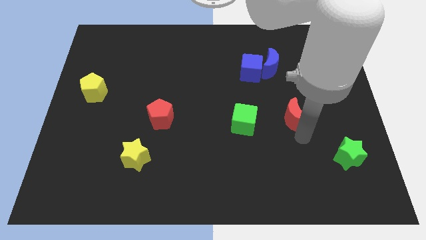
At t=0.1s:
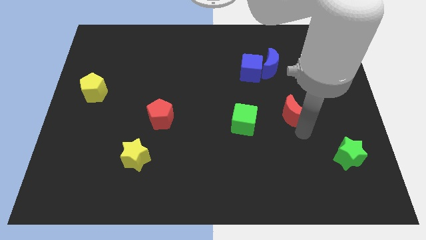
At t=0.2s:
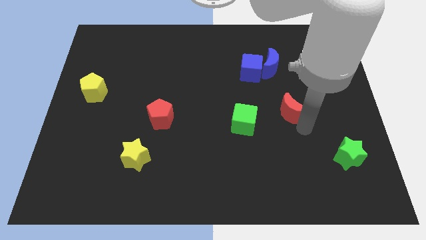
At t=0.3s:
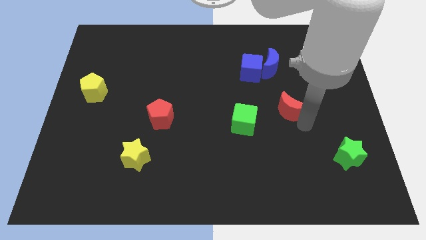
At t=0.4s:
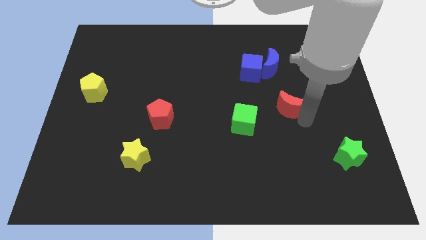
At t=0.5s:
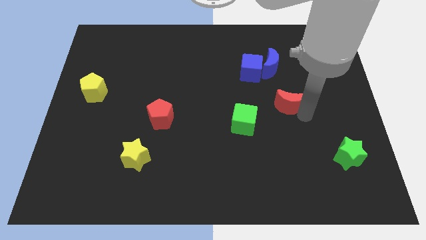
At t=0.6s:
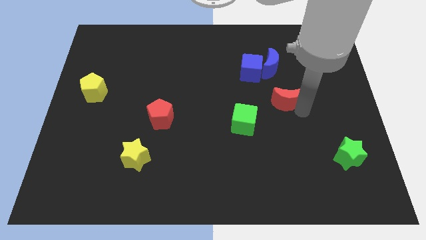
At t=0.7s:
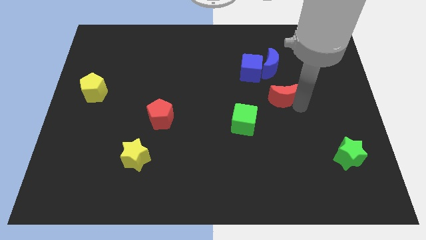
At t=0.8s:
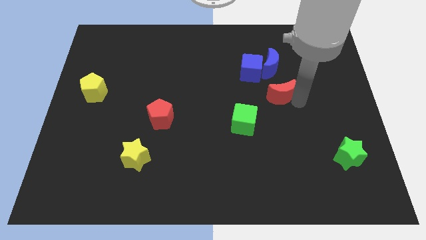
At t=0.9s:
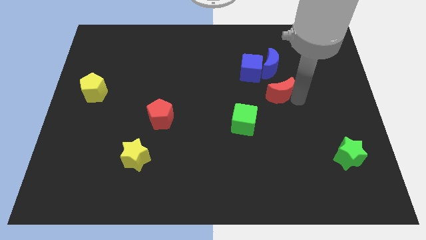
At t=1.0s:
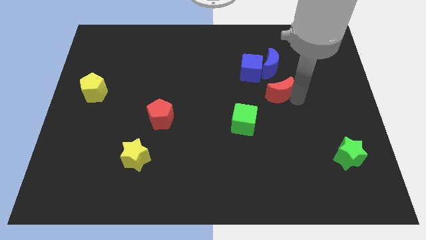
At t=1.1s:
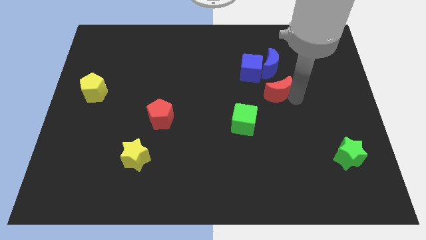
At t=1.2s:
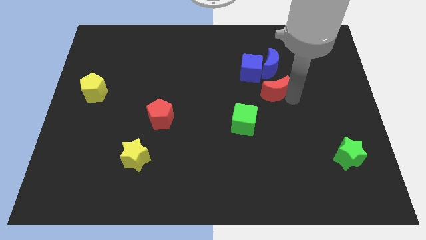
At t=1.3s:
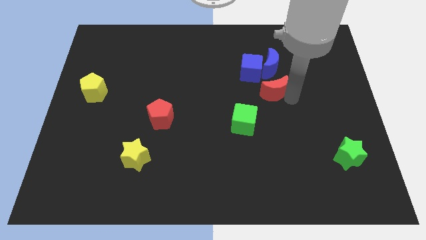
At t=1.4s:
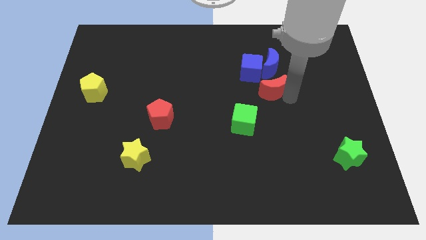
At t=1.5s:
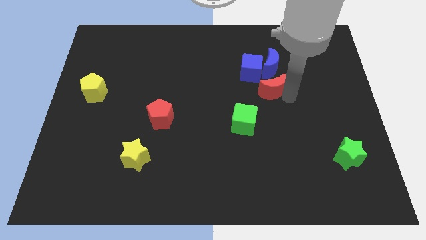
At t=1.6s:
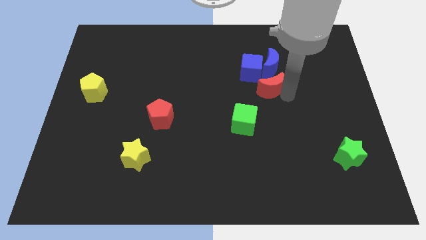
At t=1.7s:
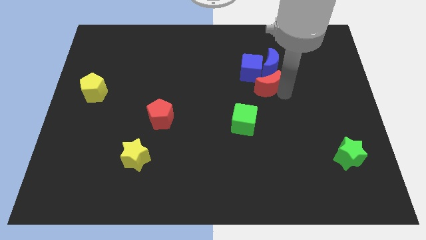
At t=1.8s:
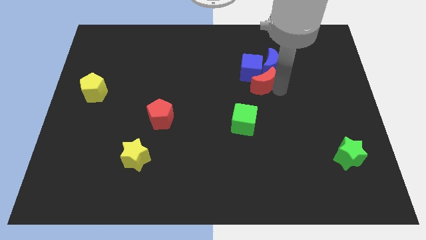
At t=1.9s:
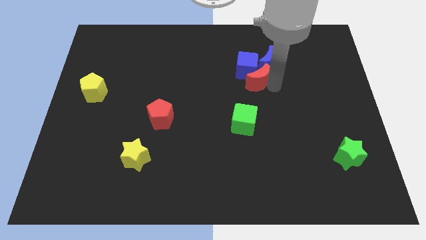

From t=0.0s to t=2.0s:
place red moon below the blue blocks

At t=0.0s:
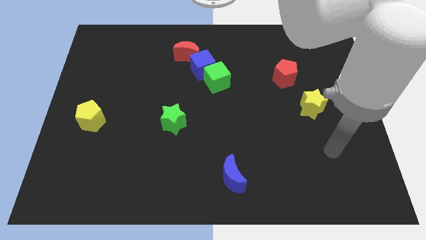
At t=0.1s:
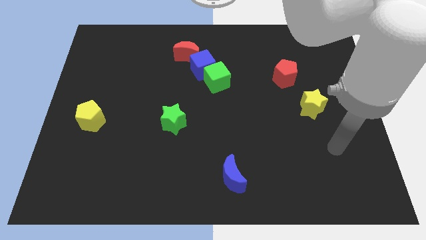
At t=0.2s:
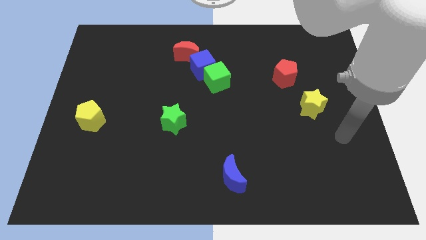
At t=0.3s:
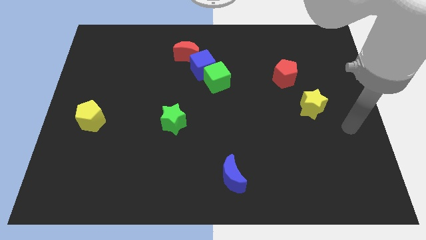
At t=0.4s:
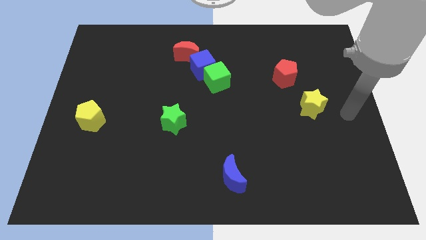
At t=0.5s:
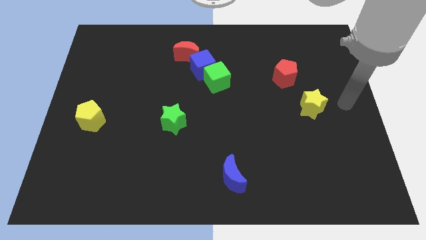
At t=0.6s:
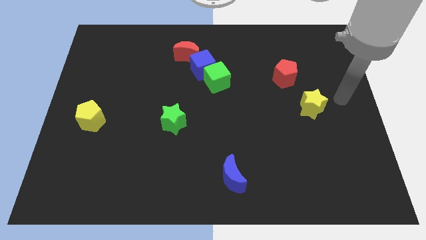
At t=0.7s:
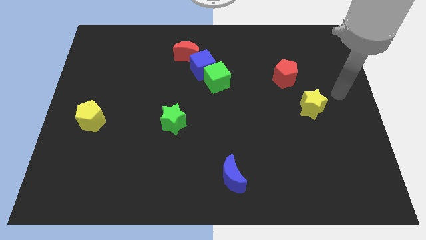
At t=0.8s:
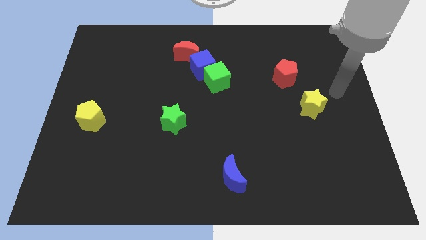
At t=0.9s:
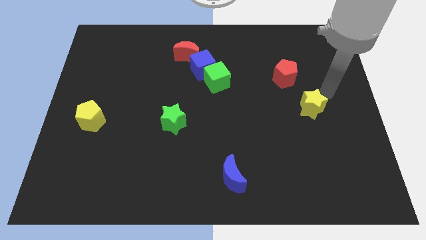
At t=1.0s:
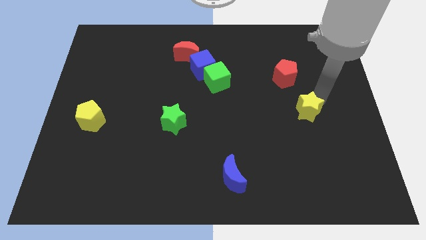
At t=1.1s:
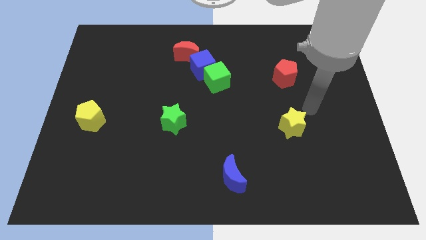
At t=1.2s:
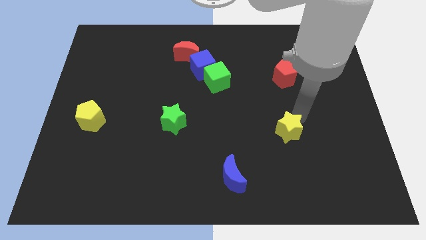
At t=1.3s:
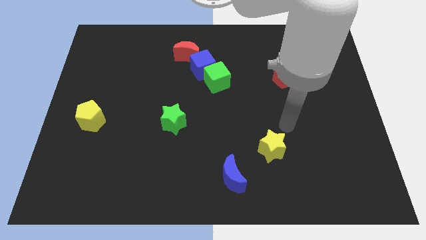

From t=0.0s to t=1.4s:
push the yellow star towards the blue crescent

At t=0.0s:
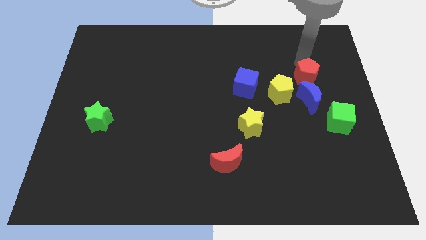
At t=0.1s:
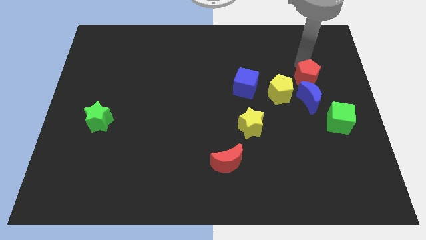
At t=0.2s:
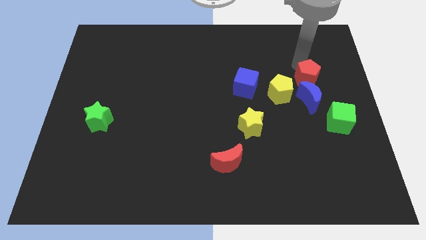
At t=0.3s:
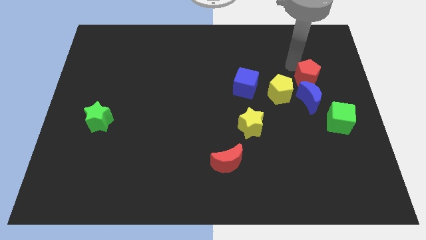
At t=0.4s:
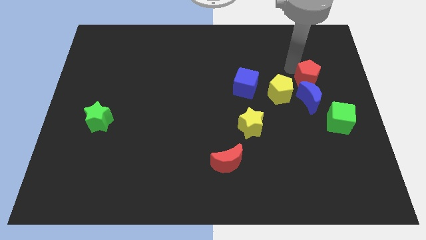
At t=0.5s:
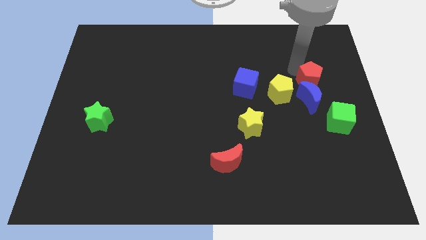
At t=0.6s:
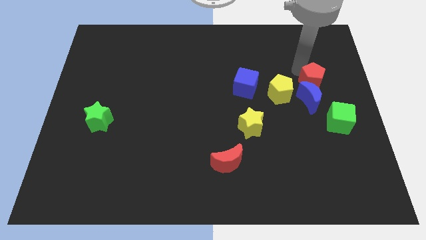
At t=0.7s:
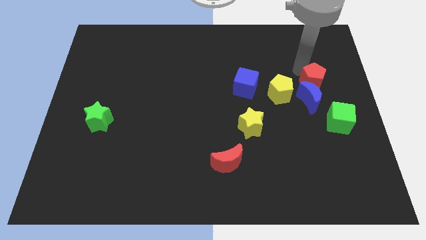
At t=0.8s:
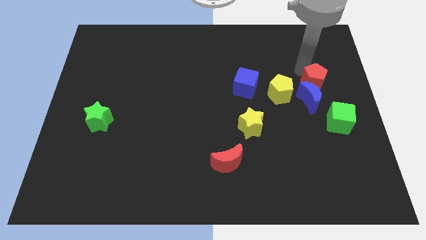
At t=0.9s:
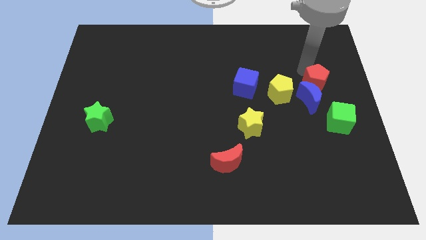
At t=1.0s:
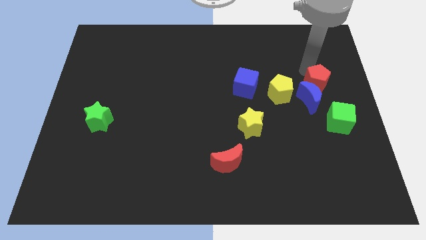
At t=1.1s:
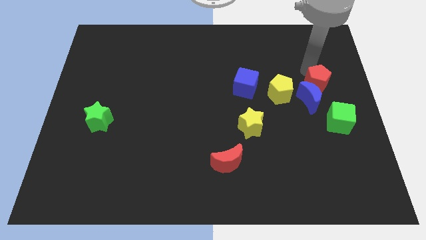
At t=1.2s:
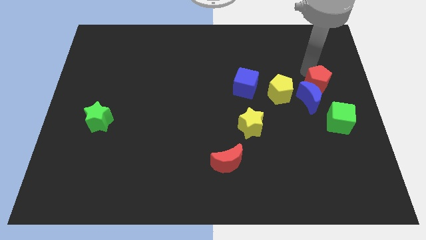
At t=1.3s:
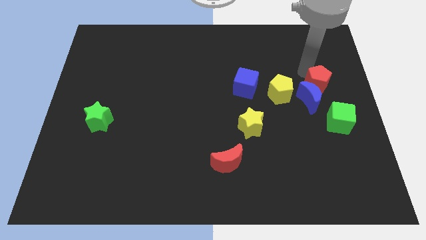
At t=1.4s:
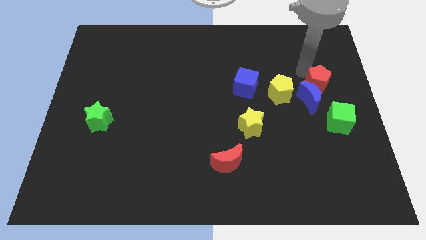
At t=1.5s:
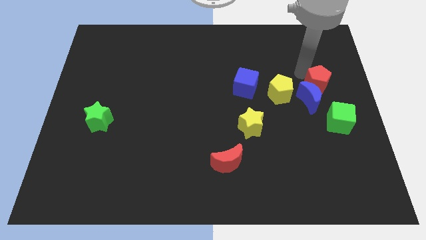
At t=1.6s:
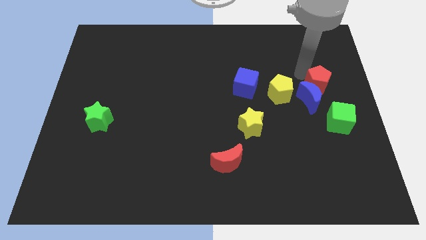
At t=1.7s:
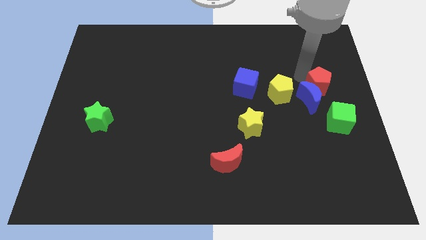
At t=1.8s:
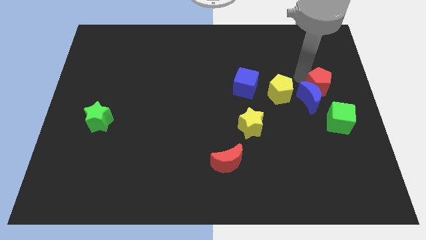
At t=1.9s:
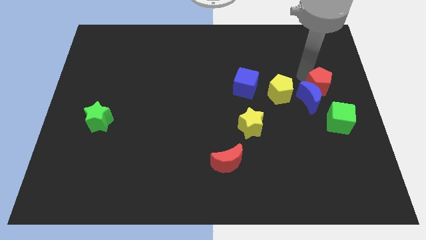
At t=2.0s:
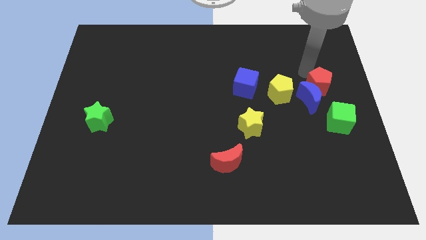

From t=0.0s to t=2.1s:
push red pentagon close to blue moon

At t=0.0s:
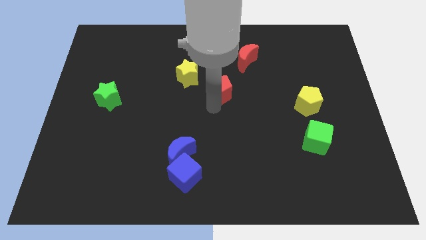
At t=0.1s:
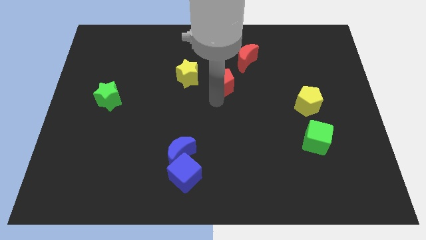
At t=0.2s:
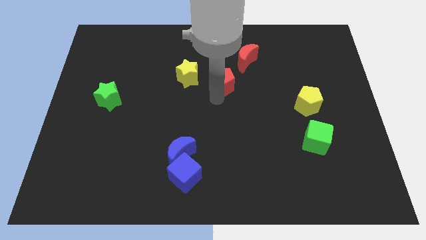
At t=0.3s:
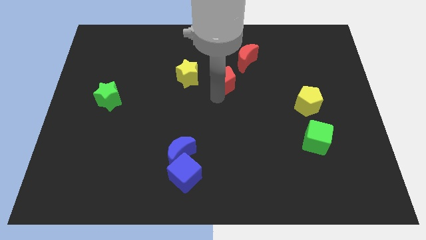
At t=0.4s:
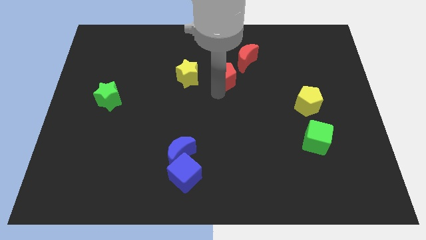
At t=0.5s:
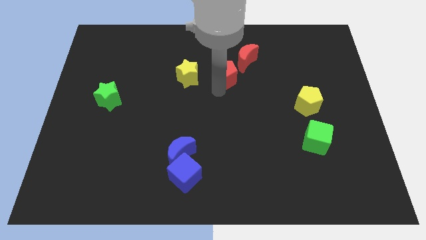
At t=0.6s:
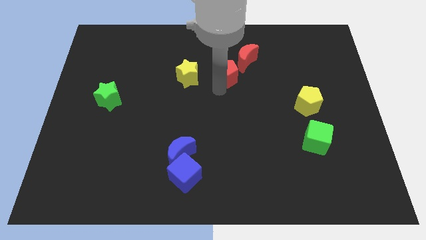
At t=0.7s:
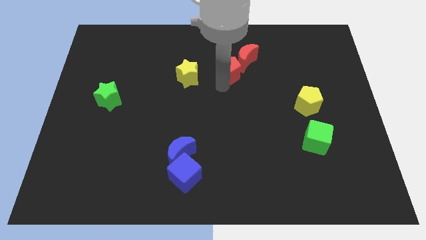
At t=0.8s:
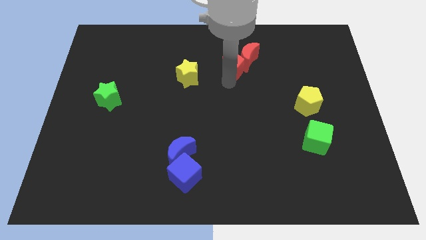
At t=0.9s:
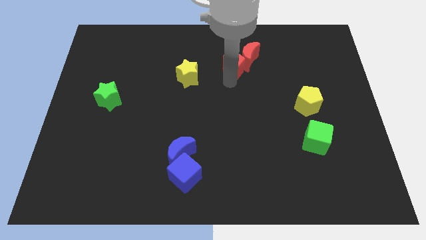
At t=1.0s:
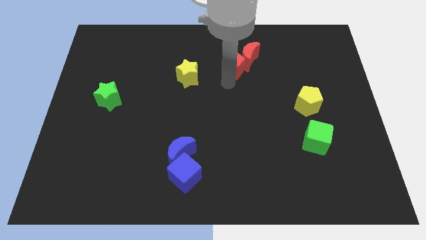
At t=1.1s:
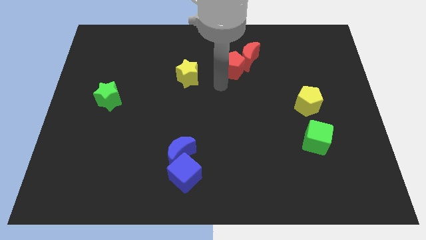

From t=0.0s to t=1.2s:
push the red pentagon into the red crescent

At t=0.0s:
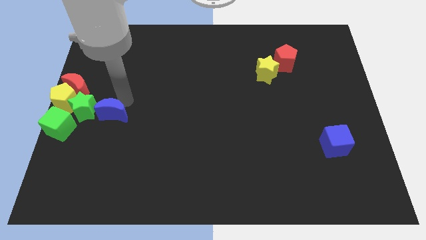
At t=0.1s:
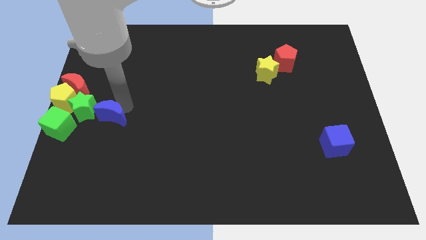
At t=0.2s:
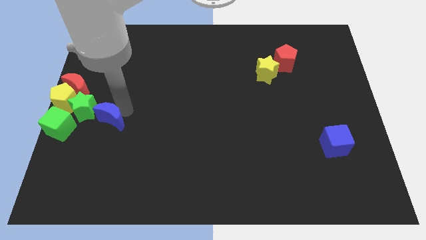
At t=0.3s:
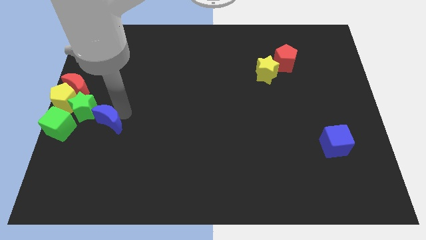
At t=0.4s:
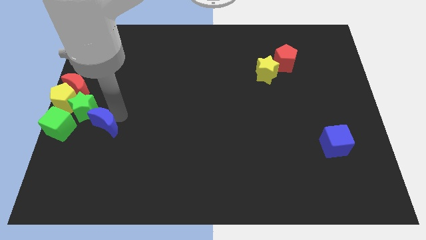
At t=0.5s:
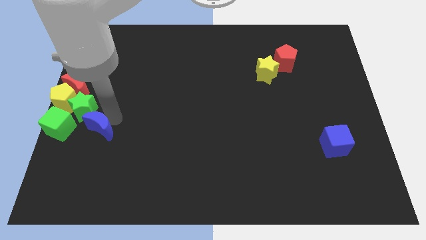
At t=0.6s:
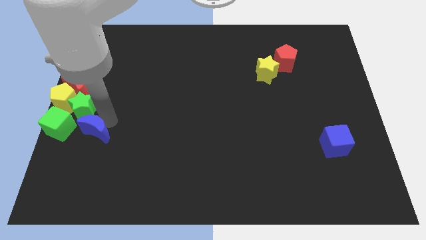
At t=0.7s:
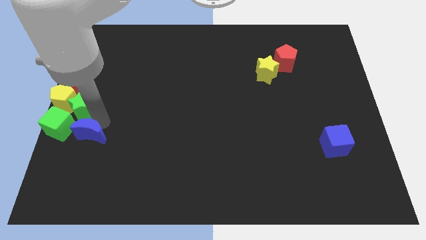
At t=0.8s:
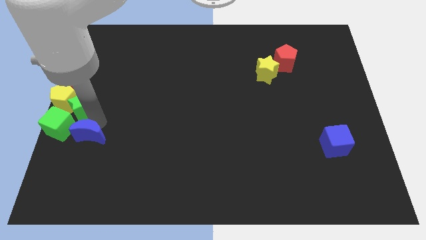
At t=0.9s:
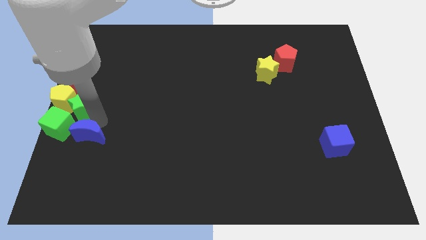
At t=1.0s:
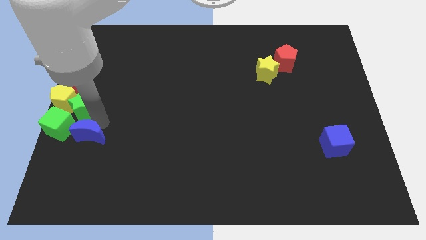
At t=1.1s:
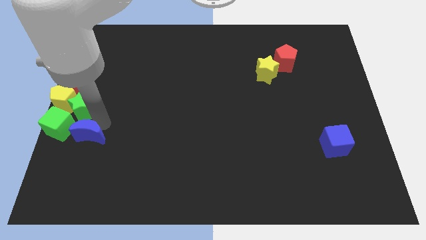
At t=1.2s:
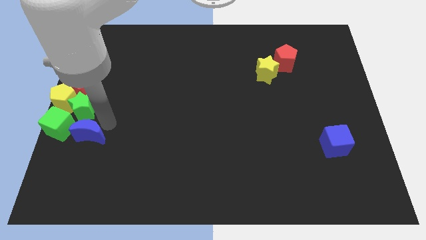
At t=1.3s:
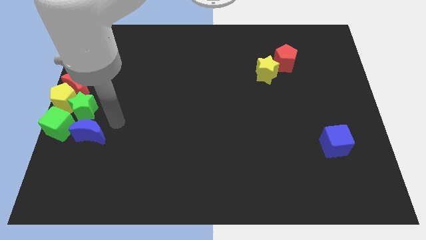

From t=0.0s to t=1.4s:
push the blue moon to the right of green cube

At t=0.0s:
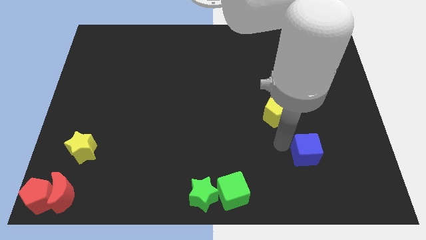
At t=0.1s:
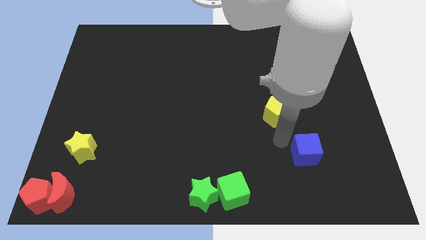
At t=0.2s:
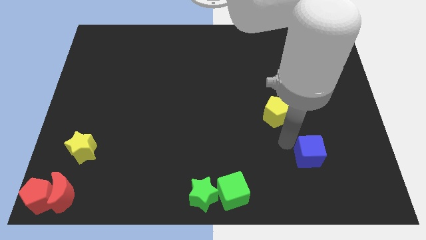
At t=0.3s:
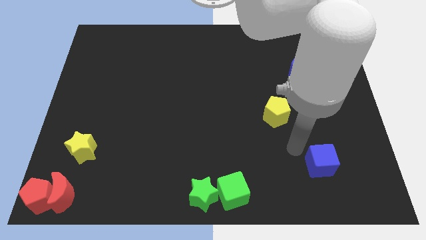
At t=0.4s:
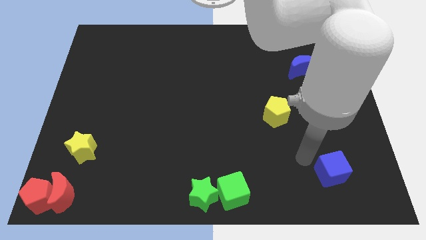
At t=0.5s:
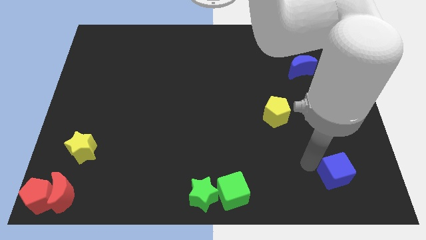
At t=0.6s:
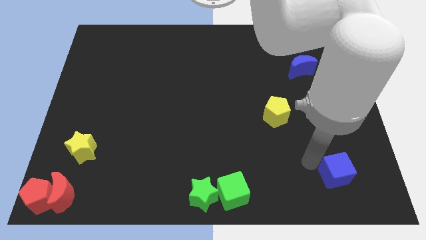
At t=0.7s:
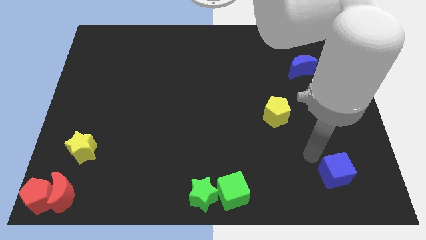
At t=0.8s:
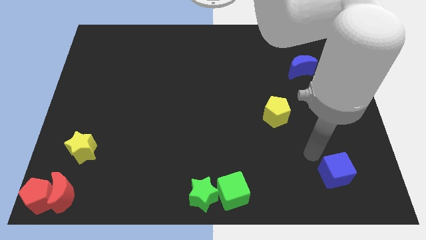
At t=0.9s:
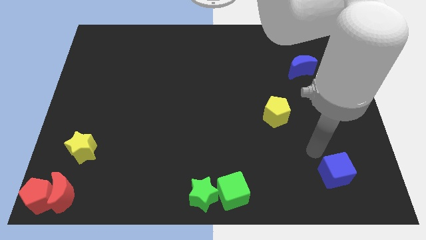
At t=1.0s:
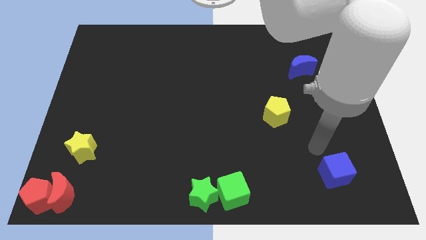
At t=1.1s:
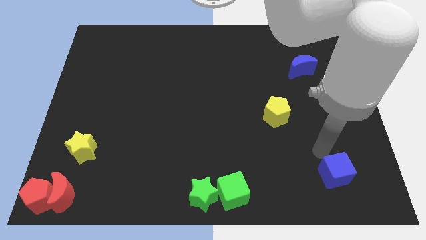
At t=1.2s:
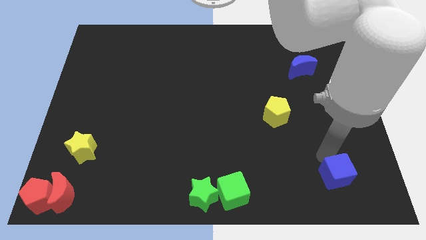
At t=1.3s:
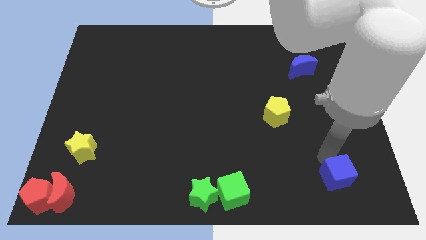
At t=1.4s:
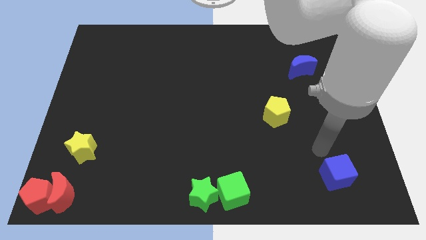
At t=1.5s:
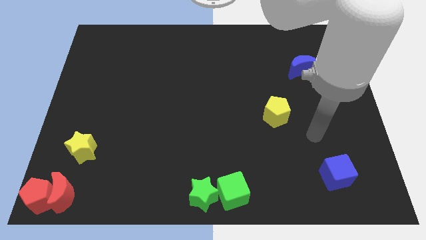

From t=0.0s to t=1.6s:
push the blue cube towards the bottom right side of the bottom right side of the board
